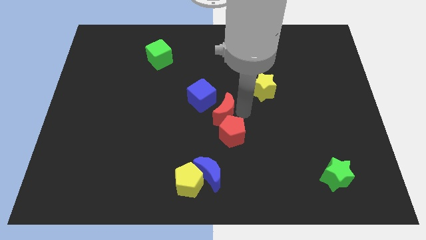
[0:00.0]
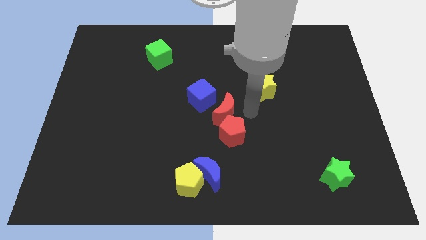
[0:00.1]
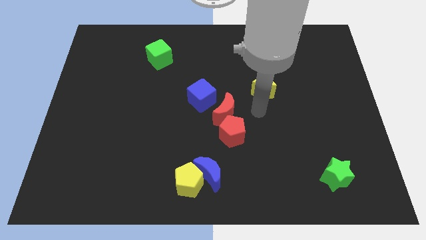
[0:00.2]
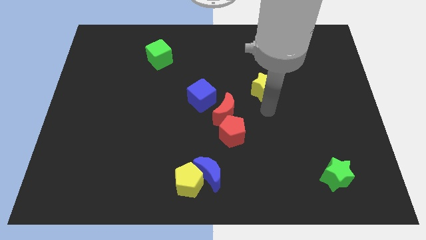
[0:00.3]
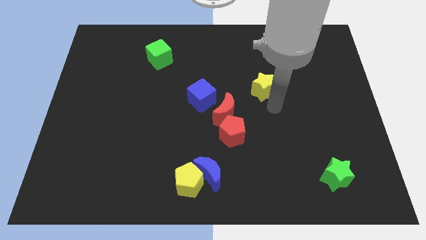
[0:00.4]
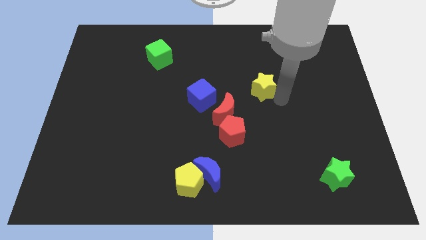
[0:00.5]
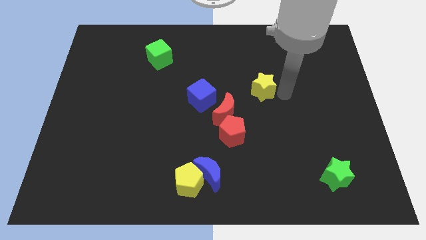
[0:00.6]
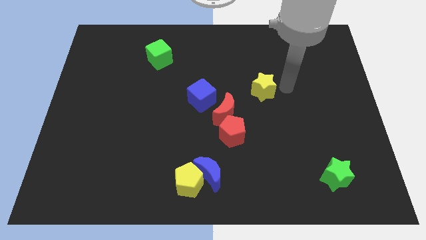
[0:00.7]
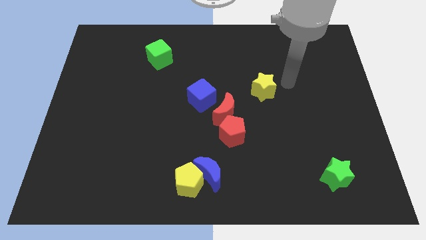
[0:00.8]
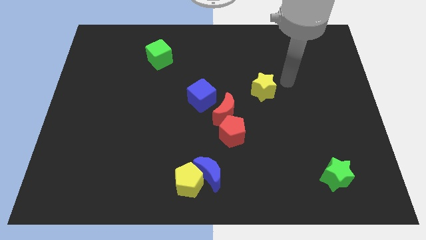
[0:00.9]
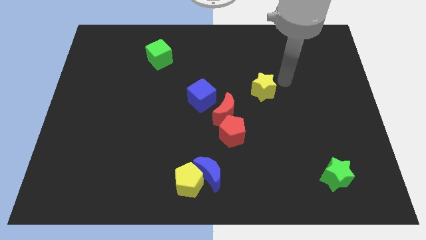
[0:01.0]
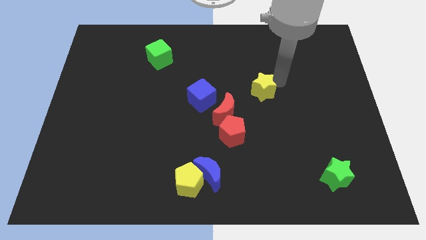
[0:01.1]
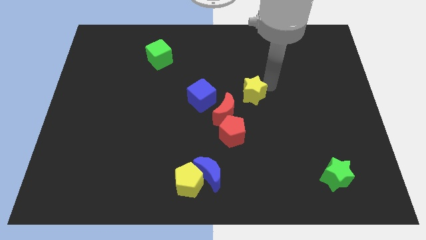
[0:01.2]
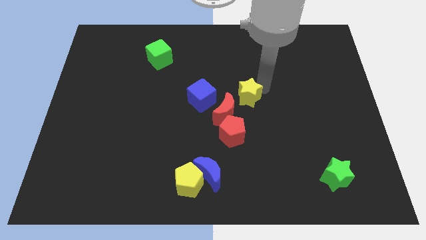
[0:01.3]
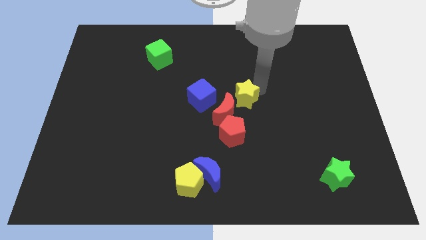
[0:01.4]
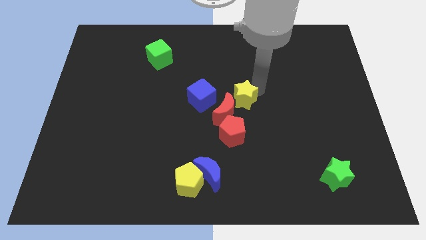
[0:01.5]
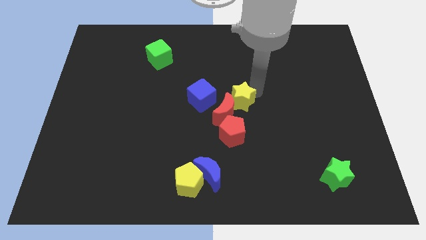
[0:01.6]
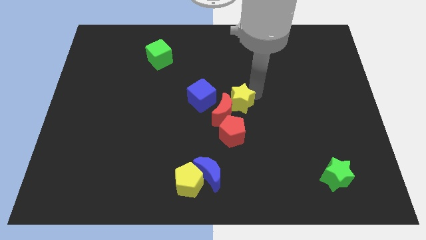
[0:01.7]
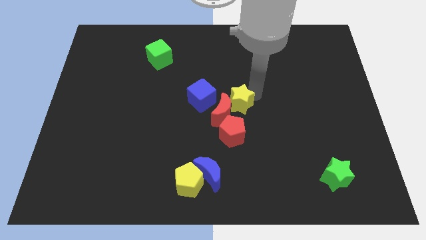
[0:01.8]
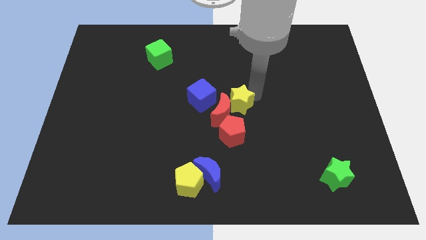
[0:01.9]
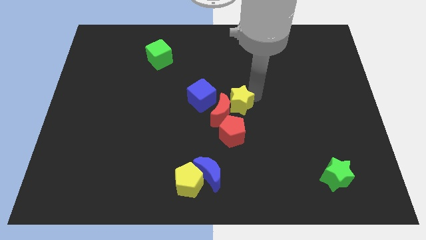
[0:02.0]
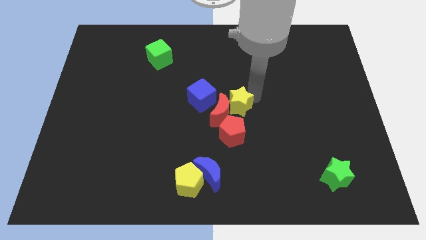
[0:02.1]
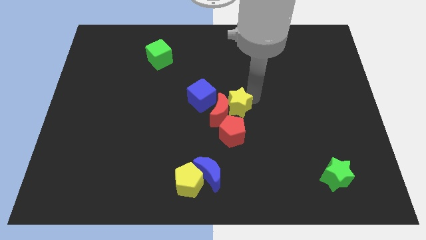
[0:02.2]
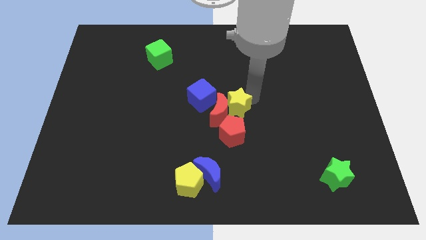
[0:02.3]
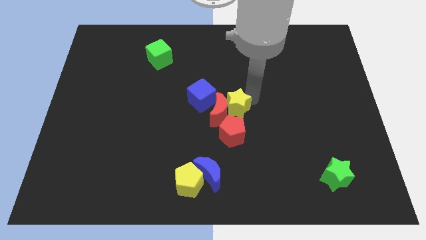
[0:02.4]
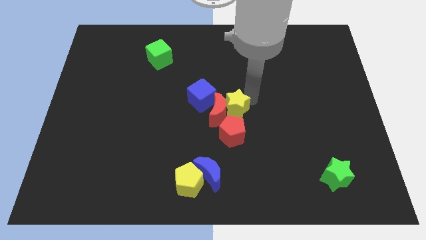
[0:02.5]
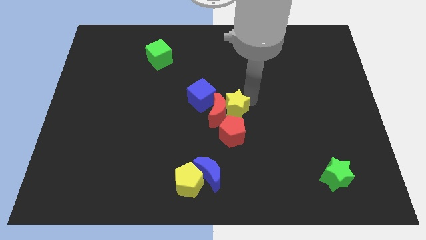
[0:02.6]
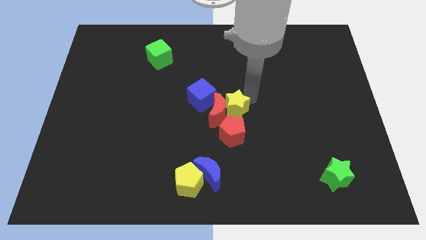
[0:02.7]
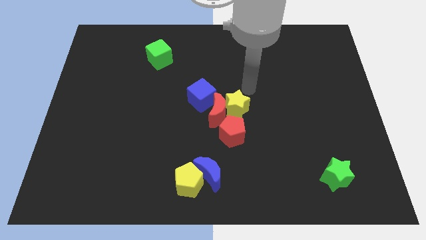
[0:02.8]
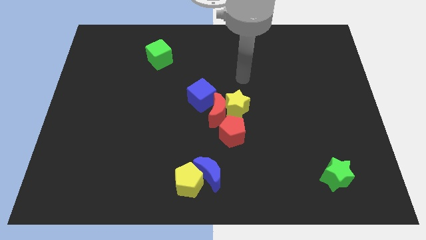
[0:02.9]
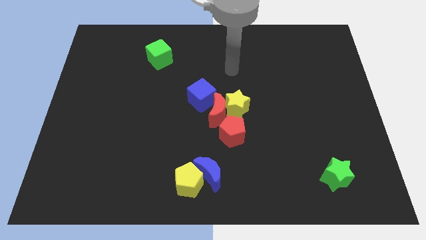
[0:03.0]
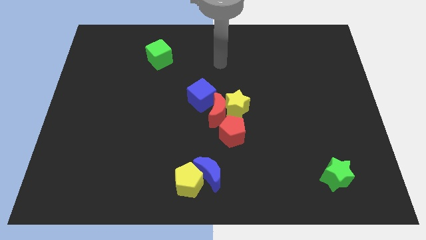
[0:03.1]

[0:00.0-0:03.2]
move the yellow star to the right of the red crescent

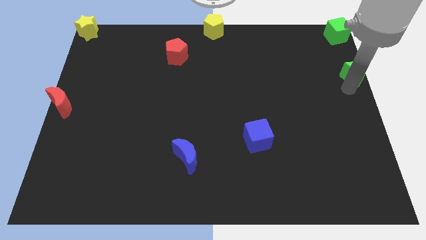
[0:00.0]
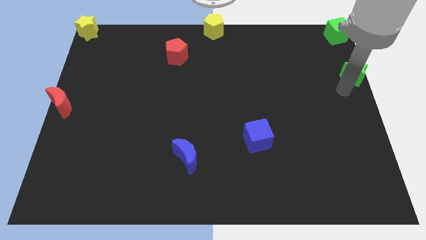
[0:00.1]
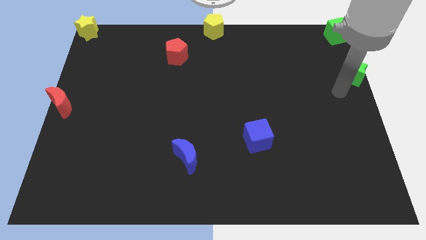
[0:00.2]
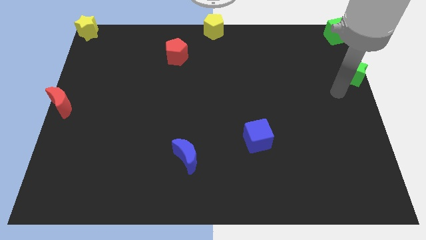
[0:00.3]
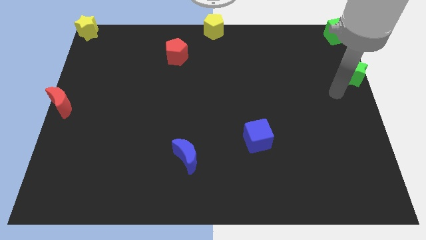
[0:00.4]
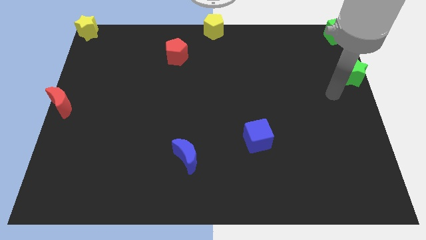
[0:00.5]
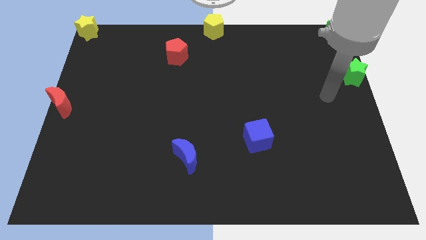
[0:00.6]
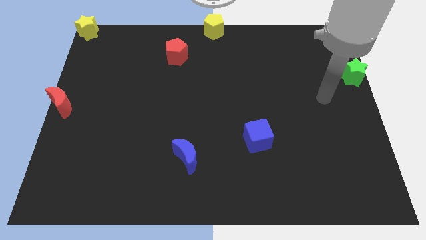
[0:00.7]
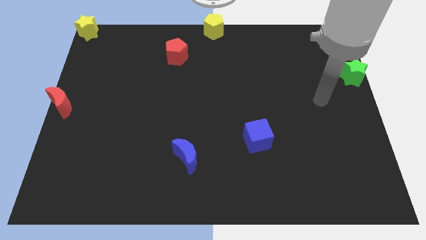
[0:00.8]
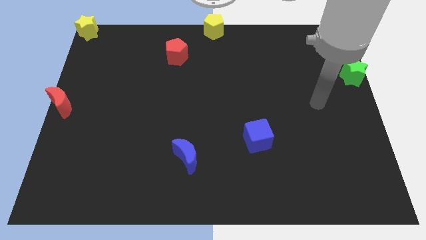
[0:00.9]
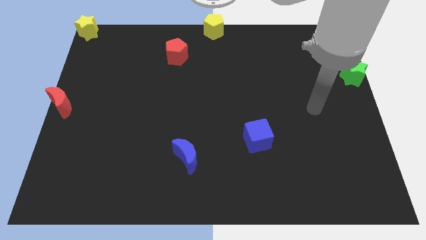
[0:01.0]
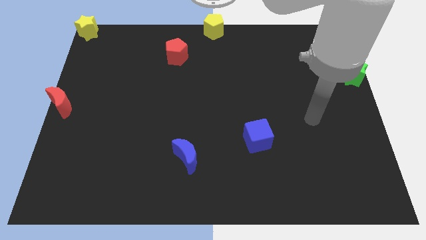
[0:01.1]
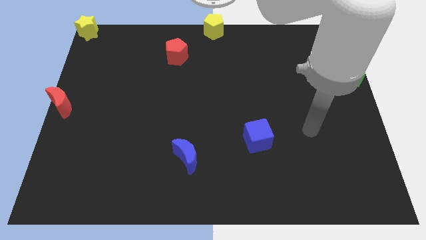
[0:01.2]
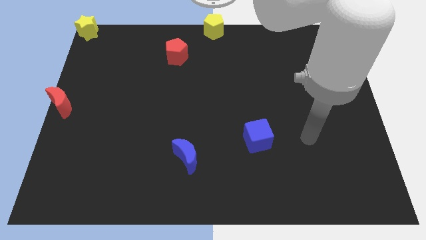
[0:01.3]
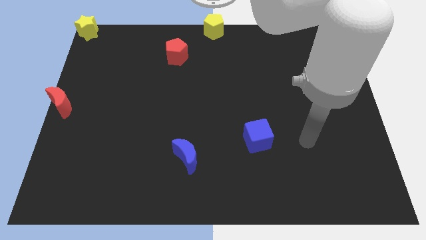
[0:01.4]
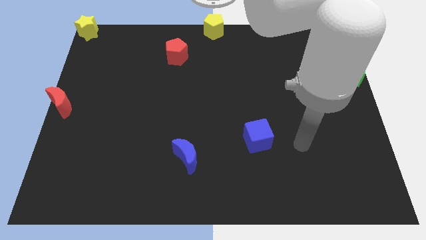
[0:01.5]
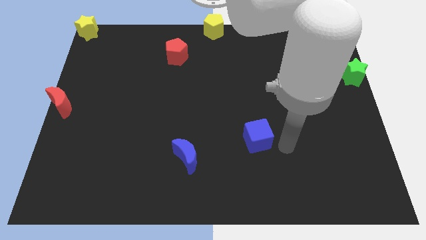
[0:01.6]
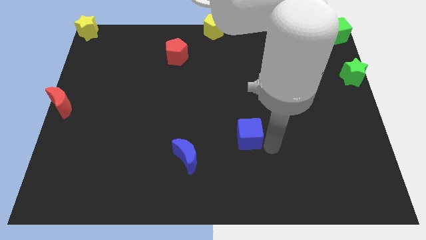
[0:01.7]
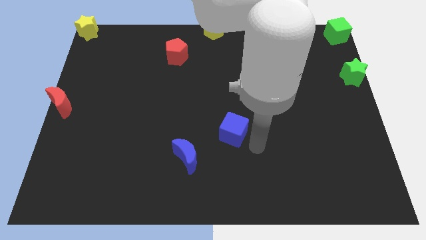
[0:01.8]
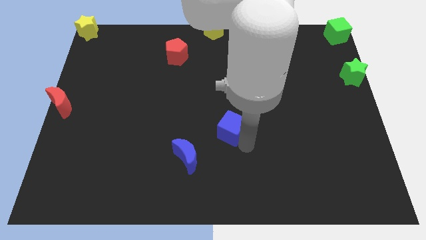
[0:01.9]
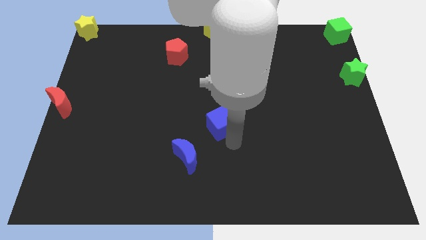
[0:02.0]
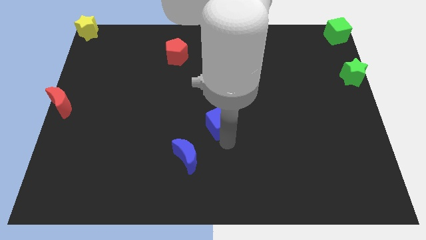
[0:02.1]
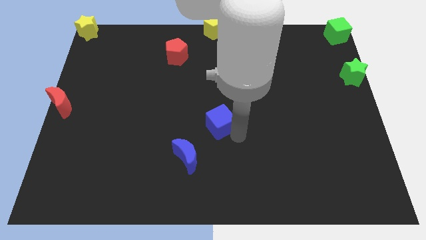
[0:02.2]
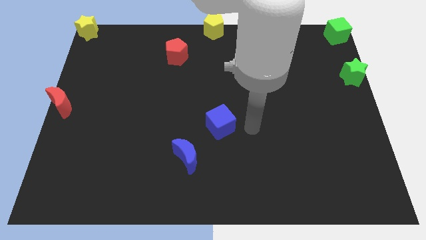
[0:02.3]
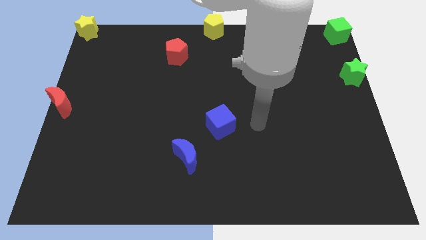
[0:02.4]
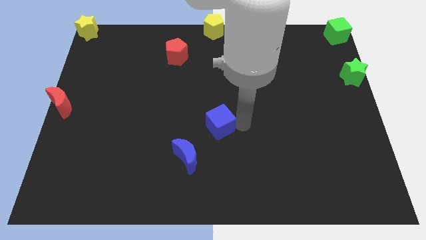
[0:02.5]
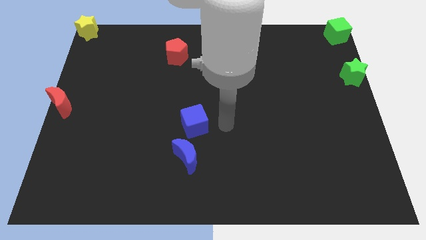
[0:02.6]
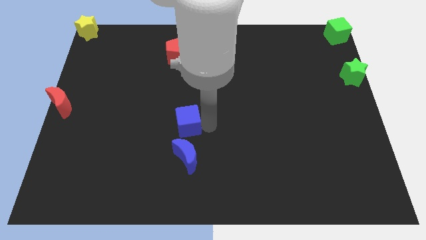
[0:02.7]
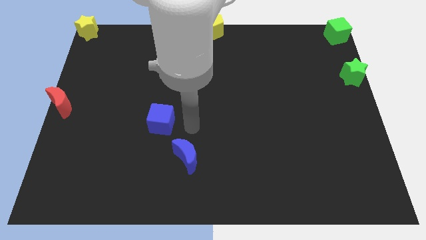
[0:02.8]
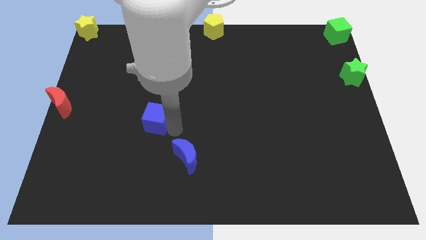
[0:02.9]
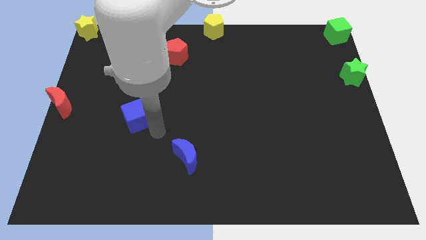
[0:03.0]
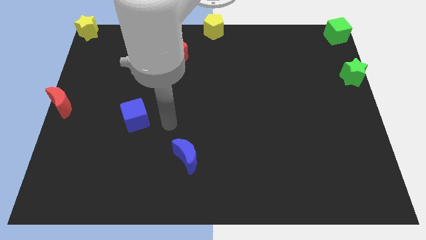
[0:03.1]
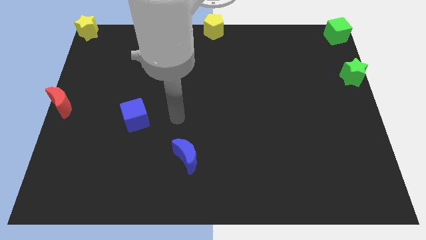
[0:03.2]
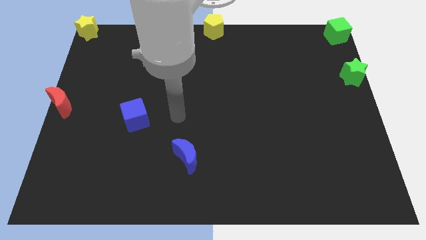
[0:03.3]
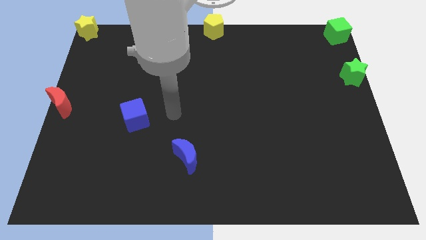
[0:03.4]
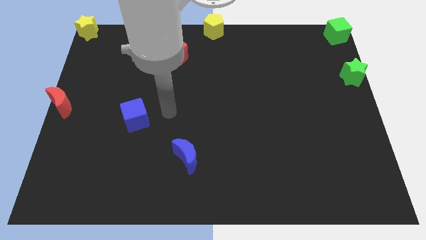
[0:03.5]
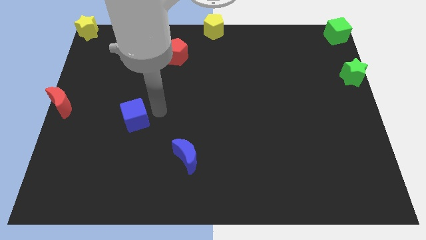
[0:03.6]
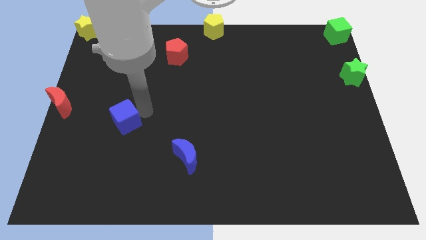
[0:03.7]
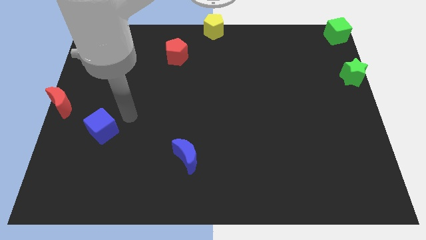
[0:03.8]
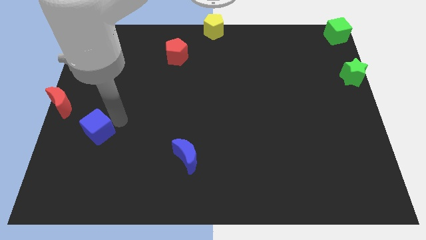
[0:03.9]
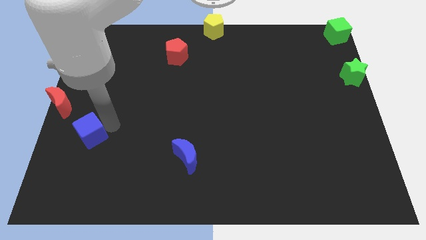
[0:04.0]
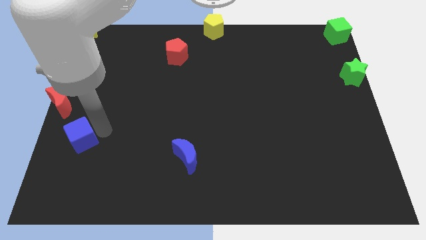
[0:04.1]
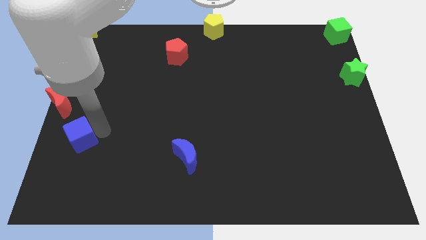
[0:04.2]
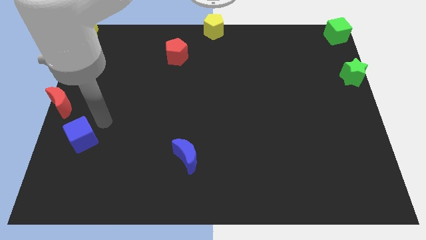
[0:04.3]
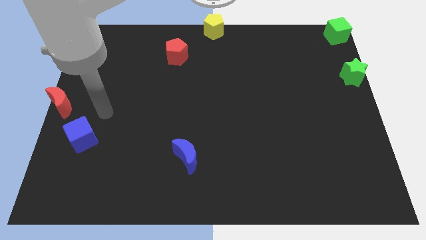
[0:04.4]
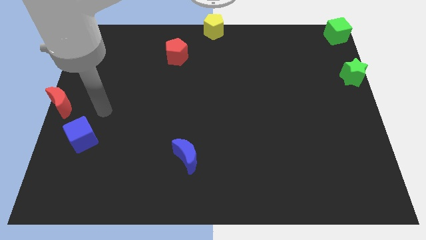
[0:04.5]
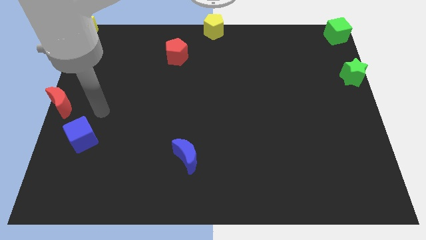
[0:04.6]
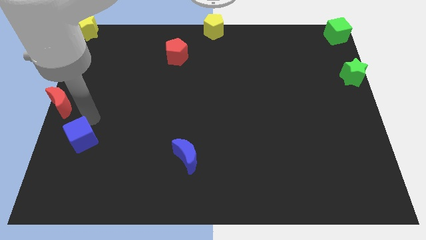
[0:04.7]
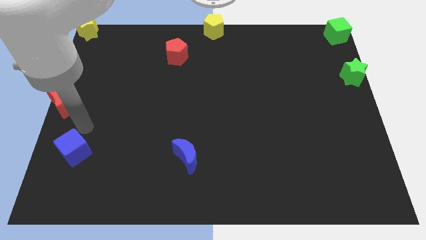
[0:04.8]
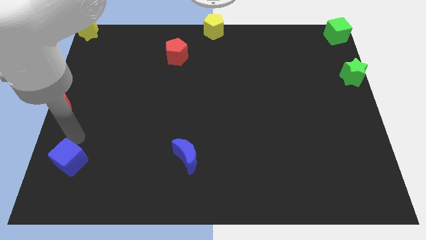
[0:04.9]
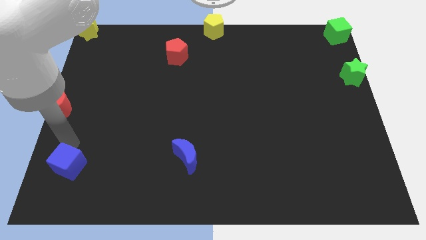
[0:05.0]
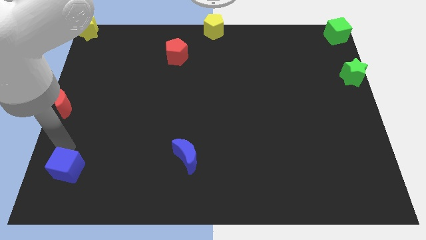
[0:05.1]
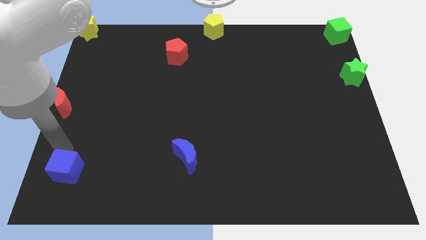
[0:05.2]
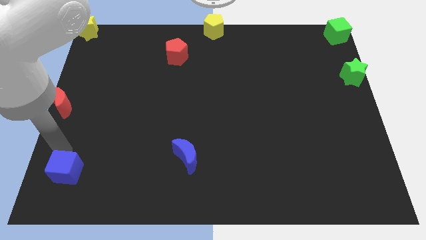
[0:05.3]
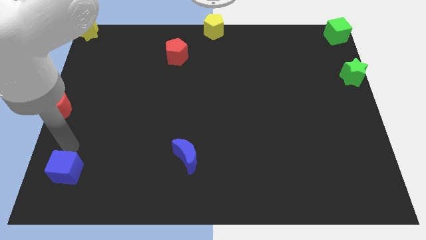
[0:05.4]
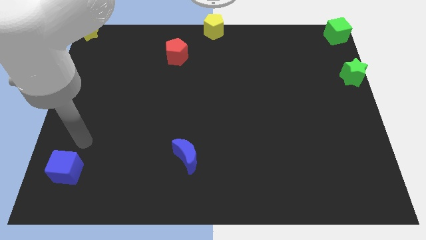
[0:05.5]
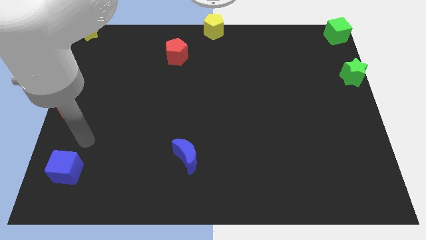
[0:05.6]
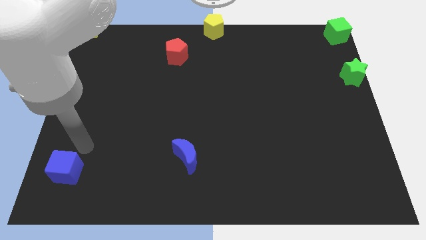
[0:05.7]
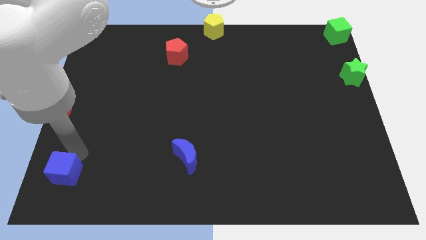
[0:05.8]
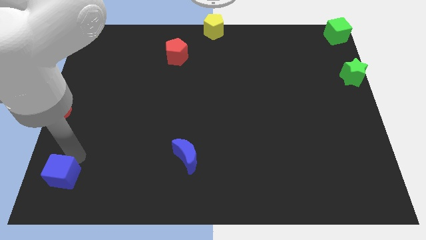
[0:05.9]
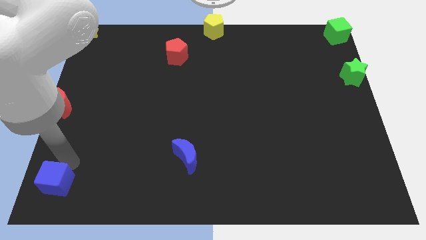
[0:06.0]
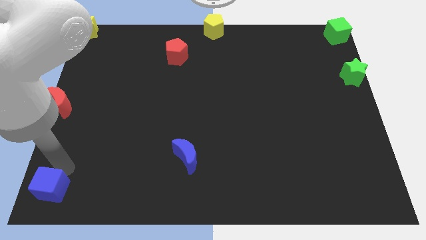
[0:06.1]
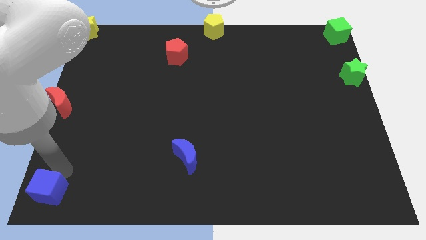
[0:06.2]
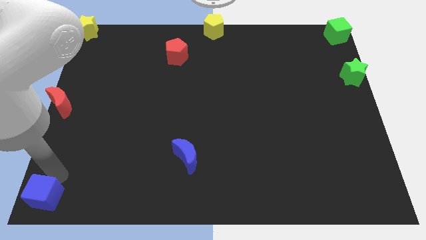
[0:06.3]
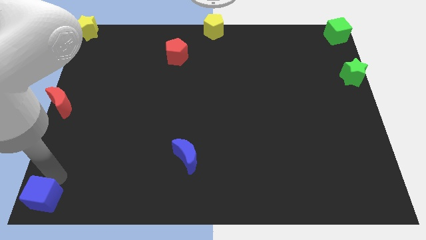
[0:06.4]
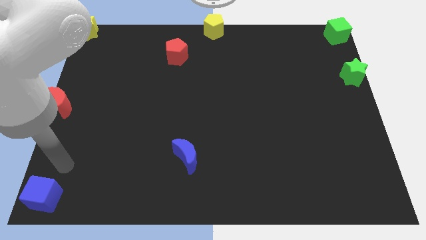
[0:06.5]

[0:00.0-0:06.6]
move the blue cube towards the bottom left corner of the board
